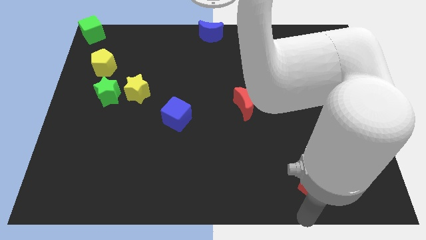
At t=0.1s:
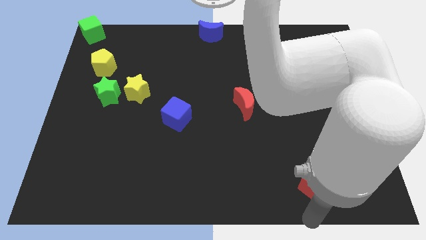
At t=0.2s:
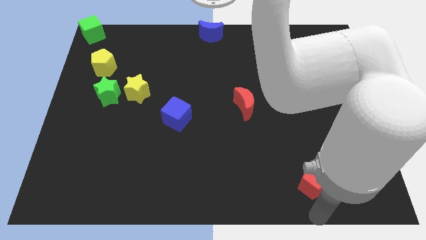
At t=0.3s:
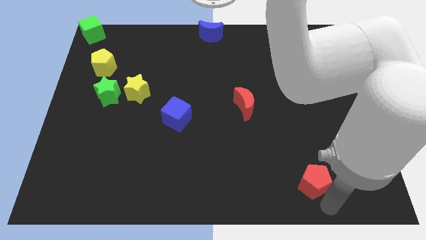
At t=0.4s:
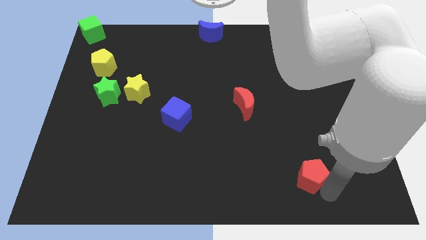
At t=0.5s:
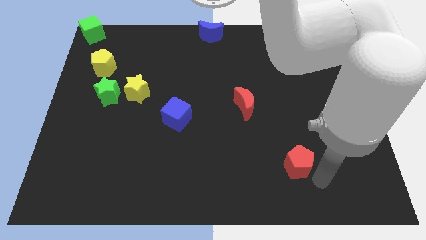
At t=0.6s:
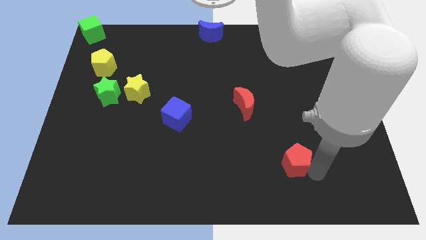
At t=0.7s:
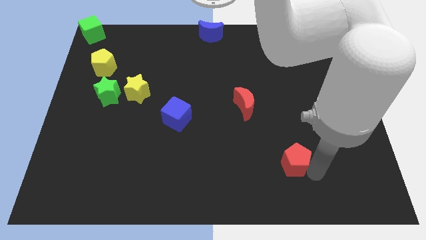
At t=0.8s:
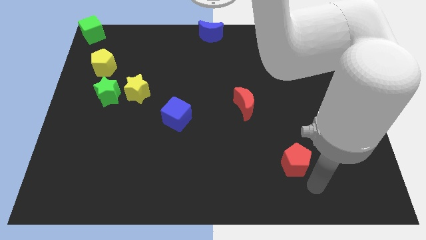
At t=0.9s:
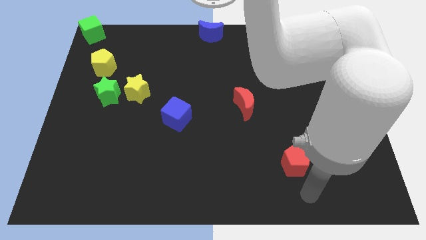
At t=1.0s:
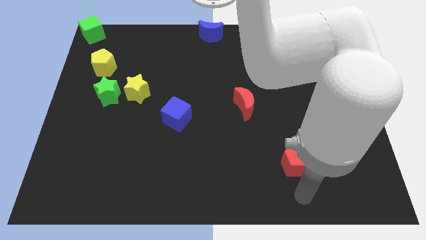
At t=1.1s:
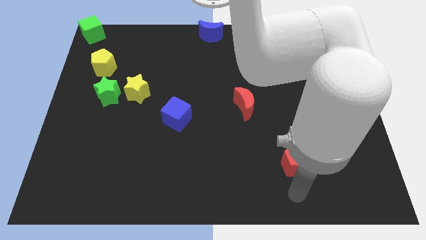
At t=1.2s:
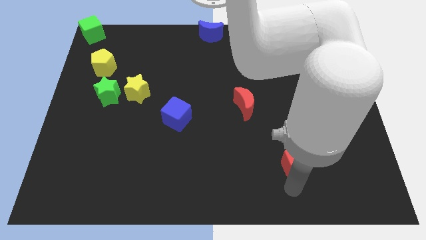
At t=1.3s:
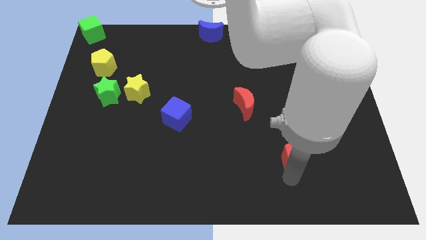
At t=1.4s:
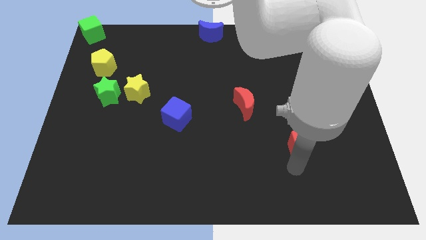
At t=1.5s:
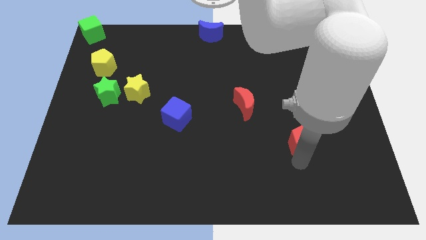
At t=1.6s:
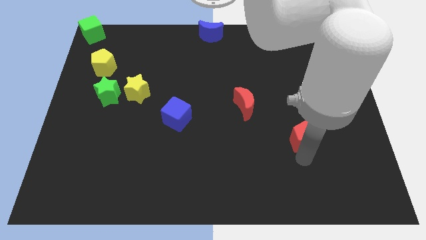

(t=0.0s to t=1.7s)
push the red penatagon diagonally to the bottom right of the red moon

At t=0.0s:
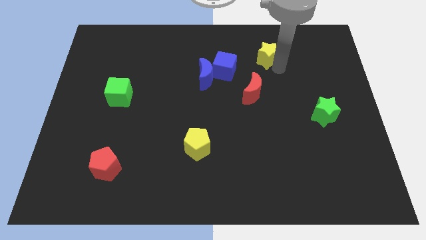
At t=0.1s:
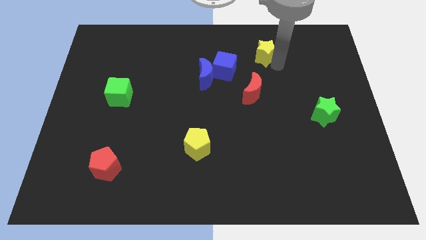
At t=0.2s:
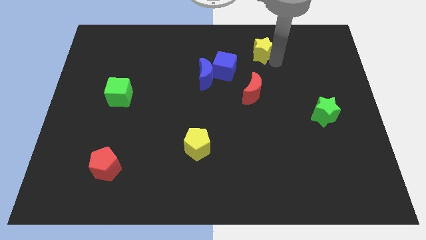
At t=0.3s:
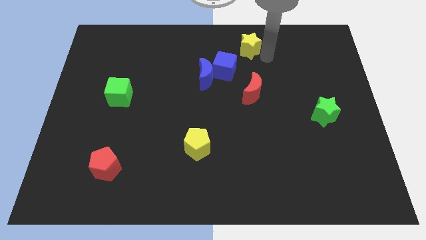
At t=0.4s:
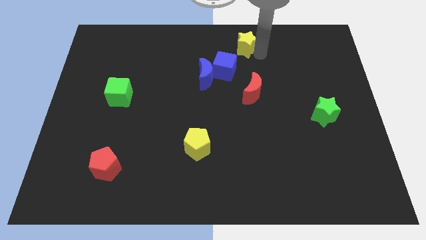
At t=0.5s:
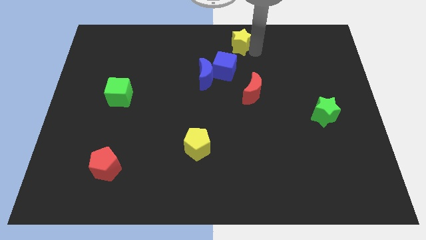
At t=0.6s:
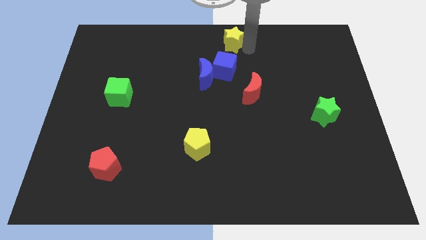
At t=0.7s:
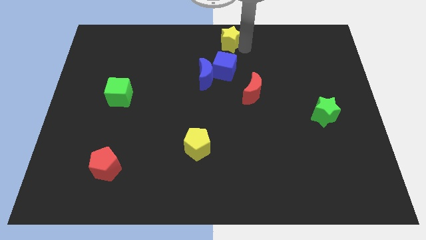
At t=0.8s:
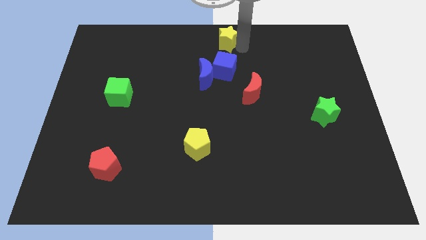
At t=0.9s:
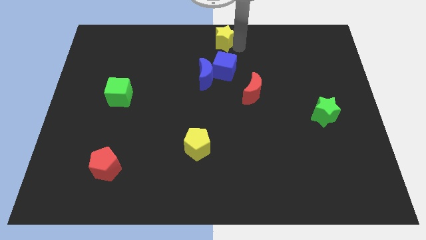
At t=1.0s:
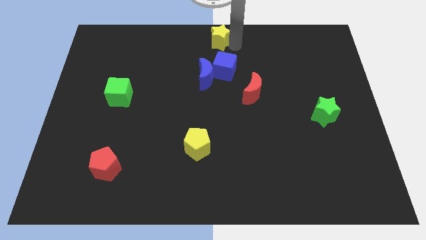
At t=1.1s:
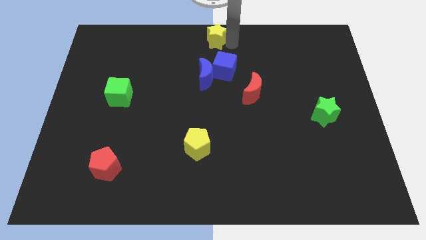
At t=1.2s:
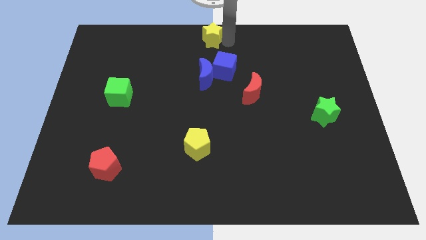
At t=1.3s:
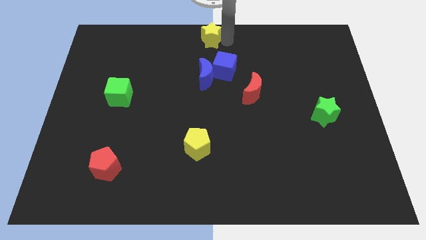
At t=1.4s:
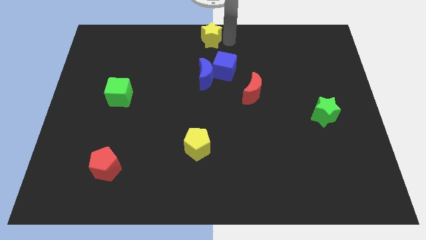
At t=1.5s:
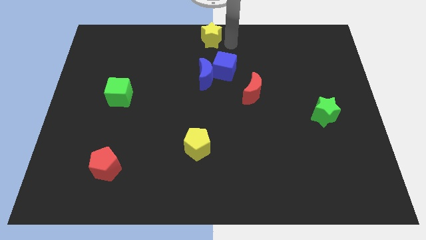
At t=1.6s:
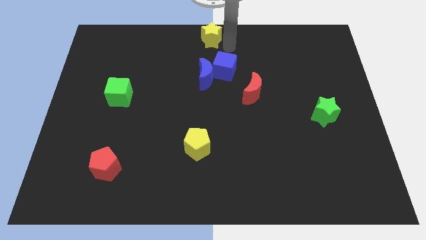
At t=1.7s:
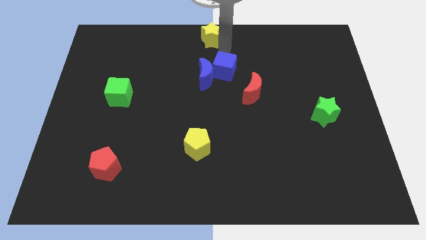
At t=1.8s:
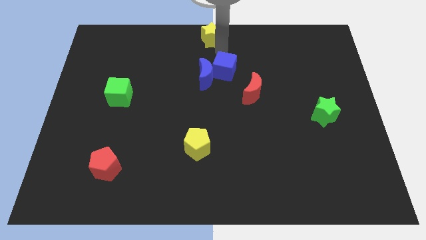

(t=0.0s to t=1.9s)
place the yellow star above the blue crescent

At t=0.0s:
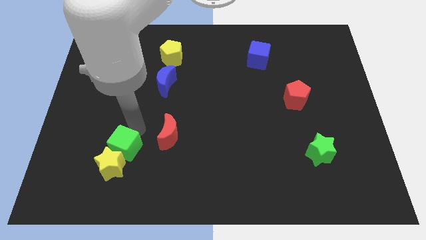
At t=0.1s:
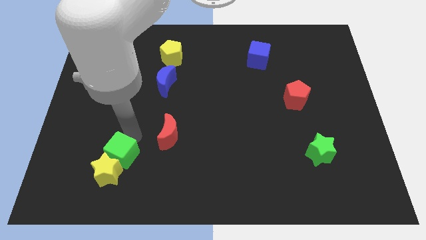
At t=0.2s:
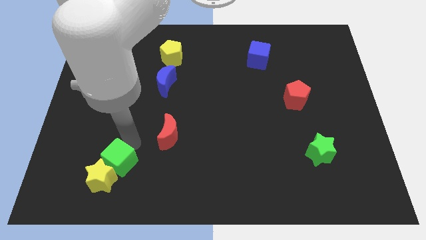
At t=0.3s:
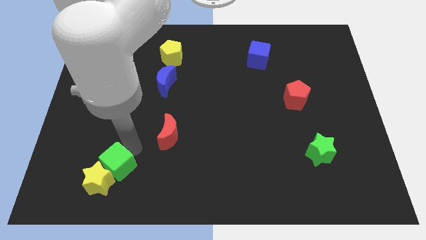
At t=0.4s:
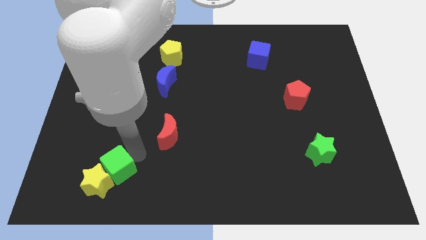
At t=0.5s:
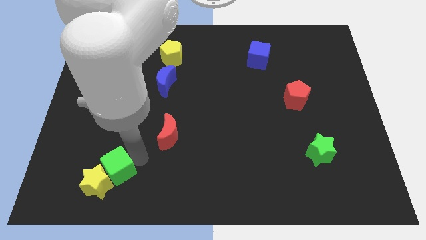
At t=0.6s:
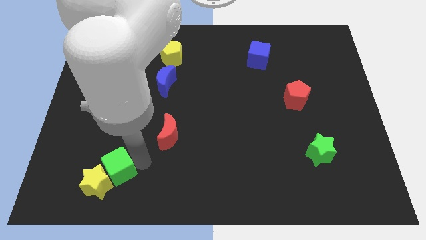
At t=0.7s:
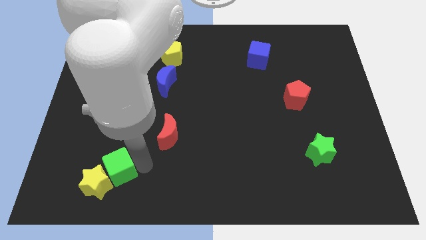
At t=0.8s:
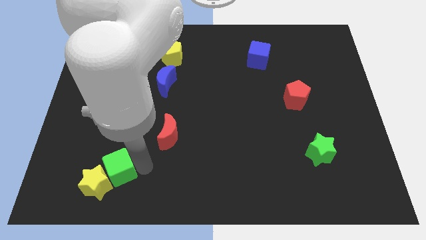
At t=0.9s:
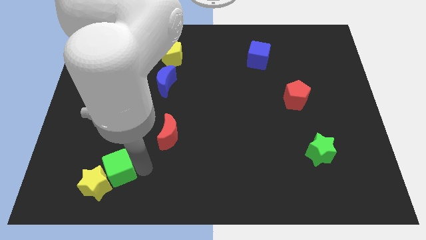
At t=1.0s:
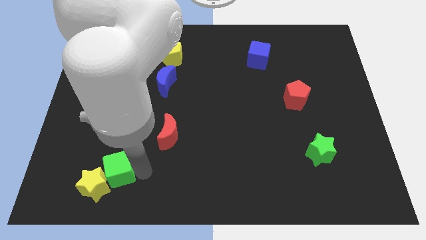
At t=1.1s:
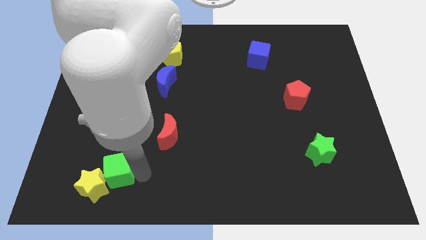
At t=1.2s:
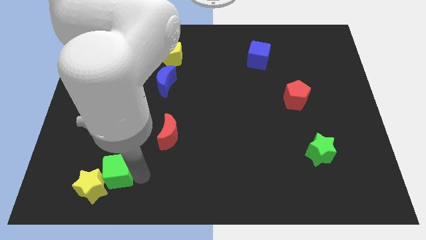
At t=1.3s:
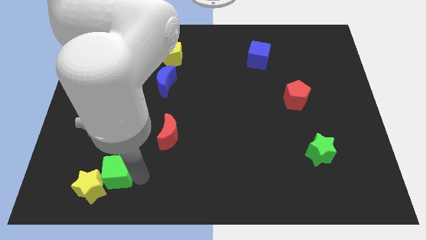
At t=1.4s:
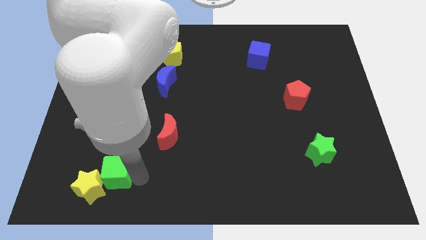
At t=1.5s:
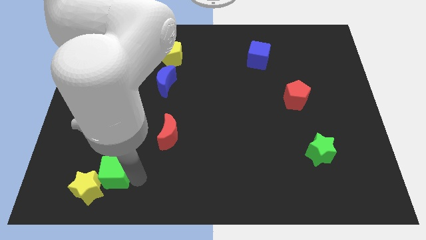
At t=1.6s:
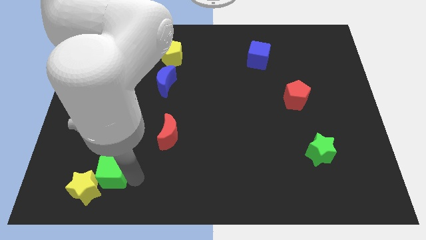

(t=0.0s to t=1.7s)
push green cube along with yellow star to the bottom

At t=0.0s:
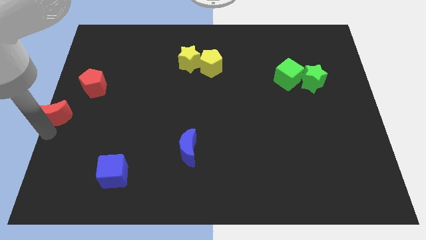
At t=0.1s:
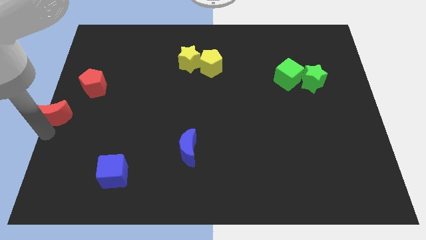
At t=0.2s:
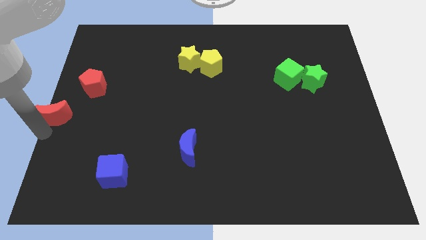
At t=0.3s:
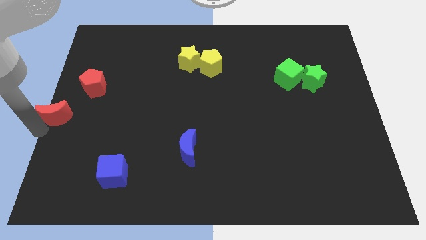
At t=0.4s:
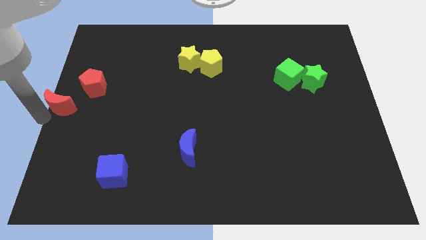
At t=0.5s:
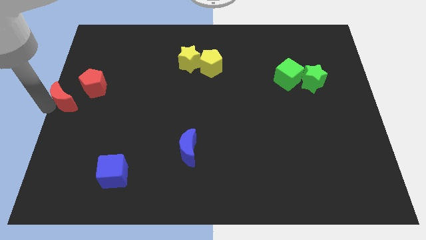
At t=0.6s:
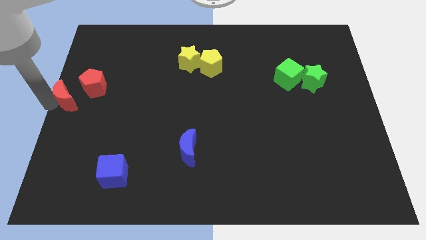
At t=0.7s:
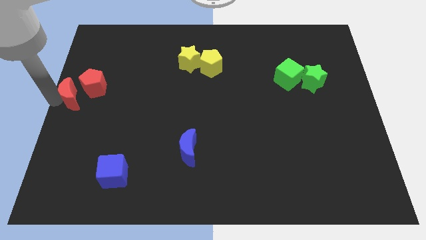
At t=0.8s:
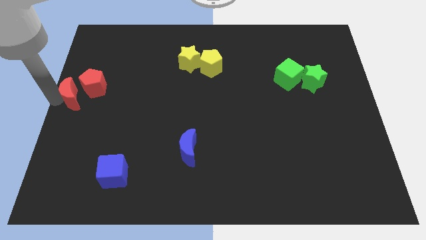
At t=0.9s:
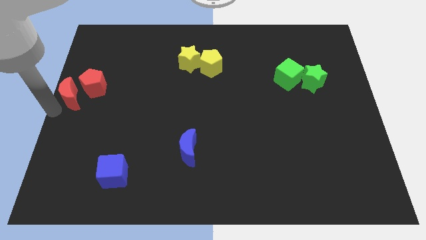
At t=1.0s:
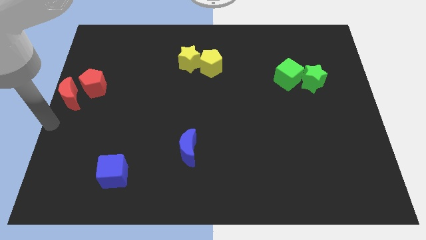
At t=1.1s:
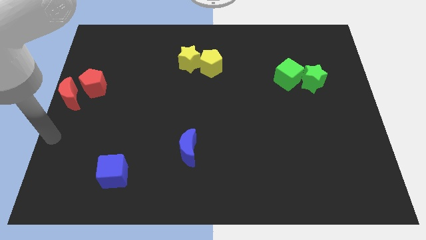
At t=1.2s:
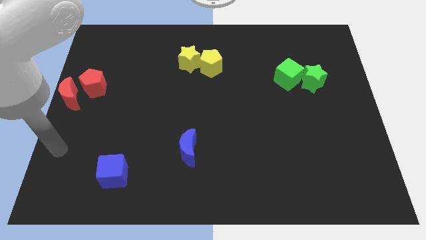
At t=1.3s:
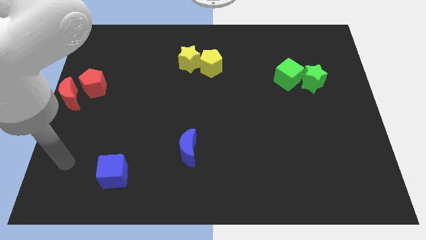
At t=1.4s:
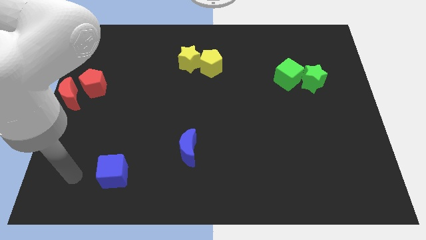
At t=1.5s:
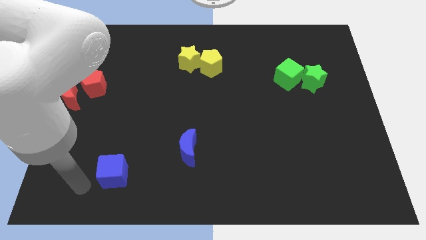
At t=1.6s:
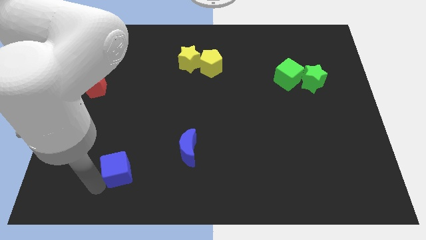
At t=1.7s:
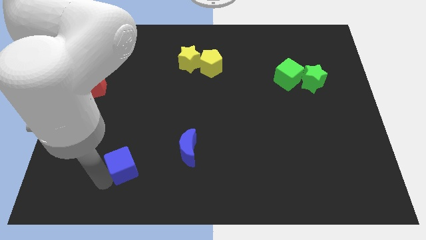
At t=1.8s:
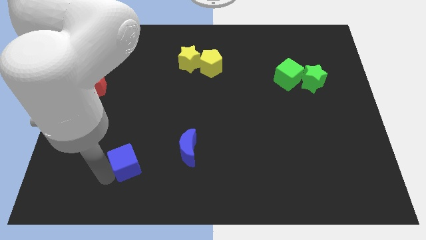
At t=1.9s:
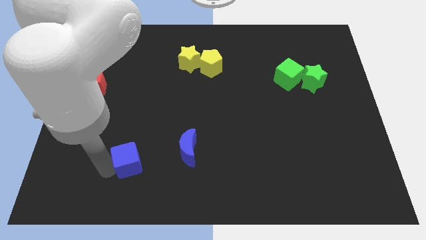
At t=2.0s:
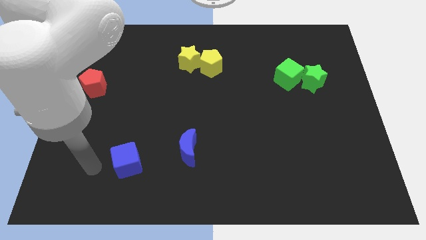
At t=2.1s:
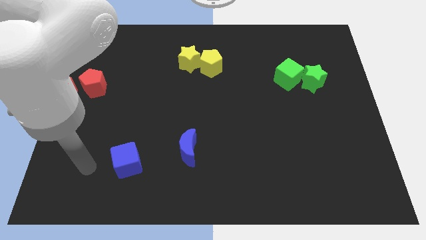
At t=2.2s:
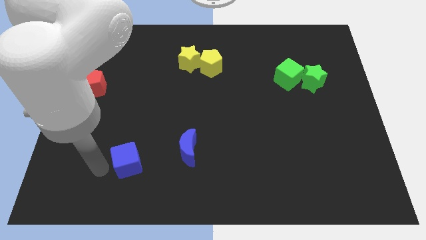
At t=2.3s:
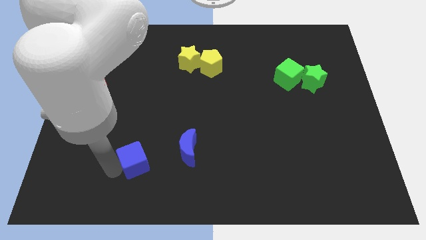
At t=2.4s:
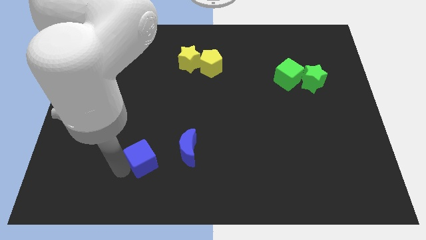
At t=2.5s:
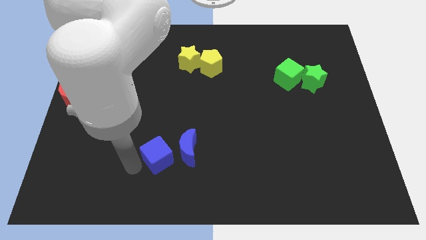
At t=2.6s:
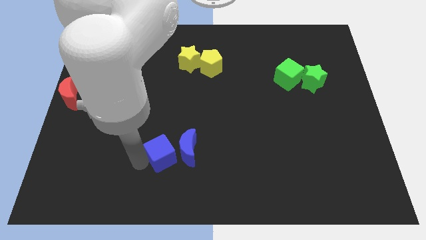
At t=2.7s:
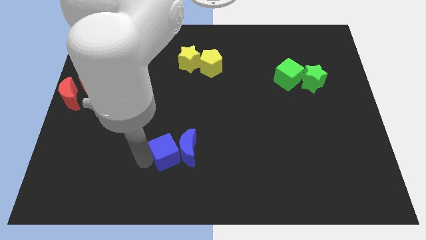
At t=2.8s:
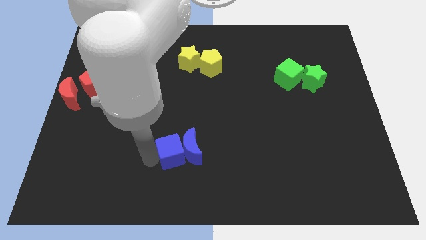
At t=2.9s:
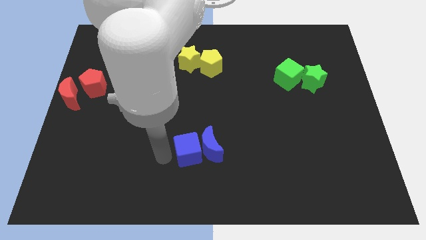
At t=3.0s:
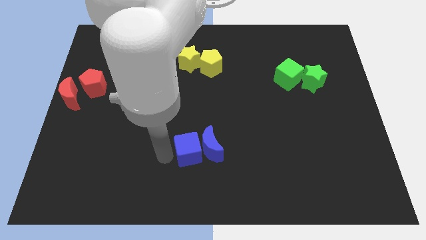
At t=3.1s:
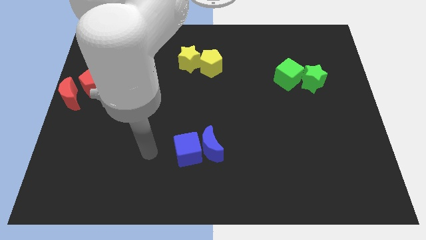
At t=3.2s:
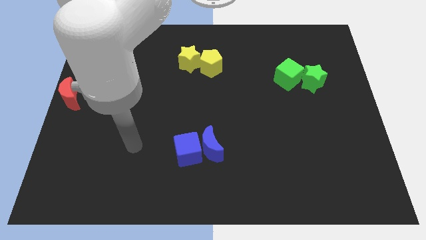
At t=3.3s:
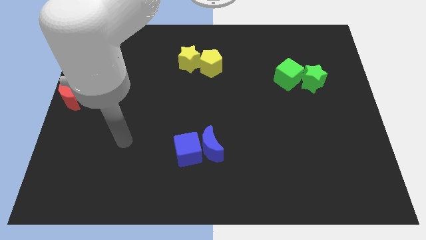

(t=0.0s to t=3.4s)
push the blue cube into the blue crescent
